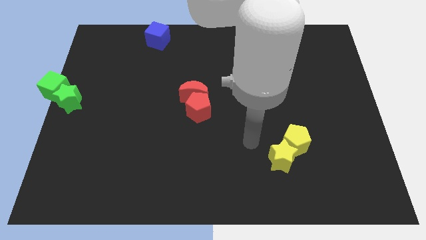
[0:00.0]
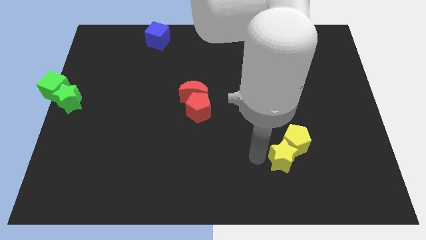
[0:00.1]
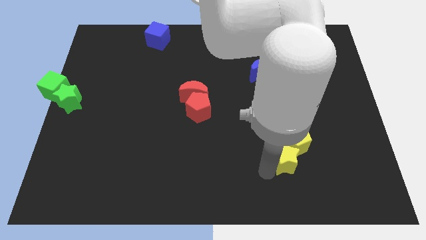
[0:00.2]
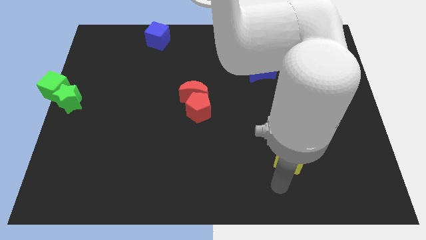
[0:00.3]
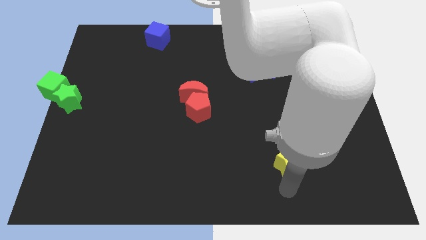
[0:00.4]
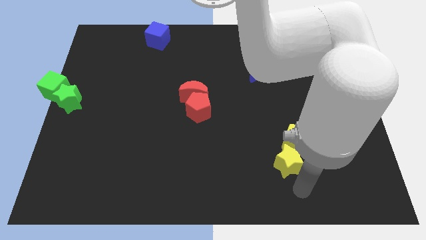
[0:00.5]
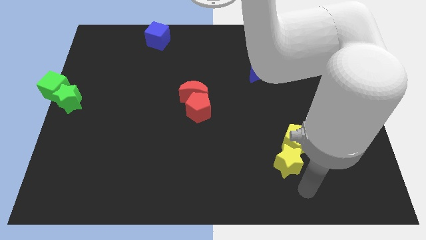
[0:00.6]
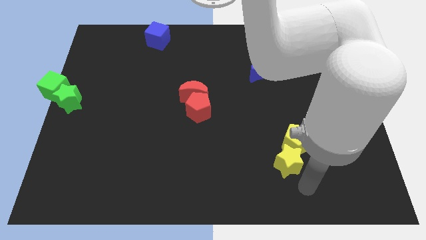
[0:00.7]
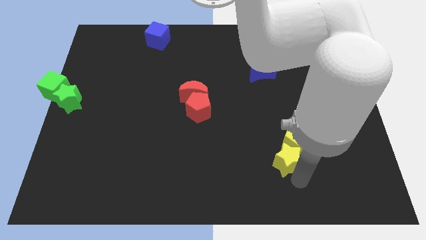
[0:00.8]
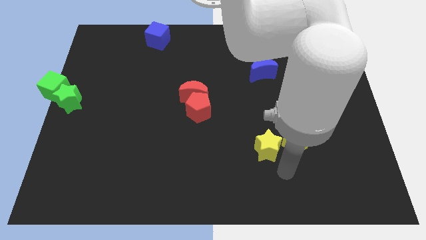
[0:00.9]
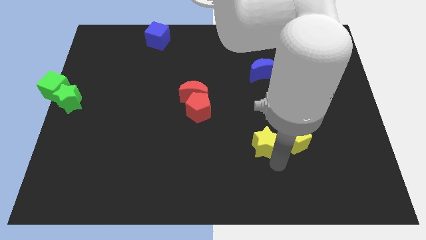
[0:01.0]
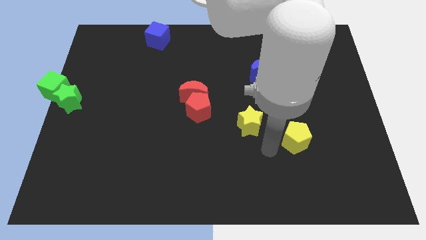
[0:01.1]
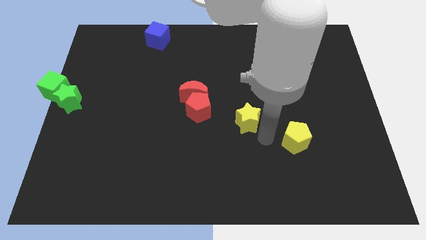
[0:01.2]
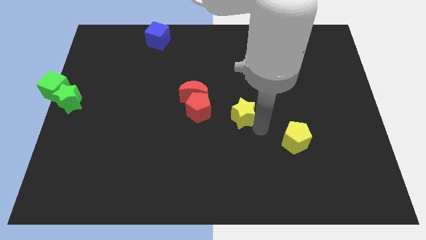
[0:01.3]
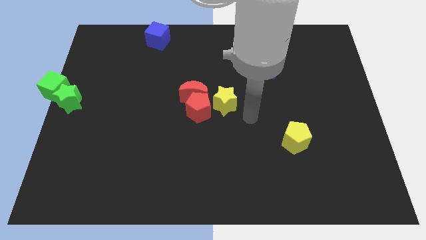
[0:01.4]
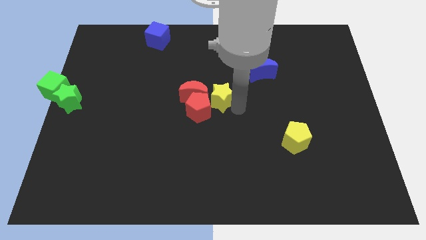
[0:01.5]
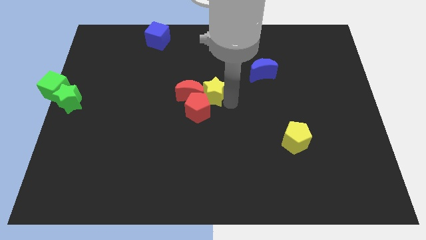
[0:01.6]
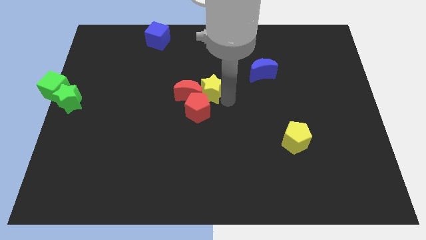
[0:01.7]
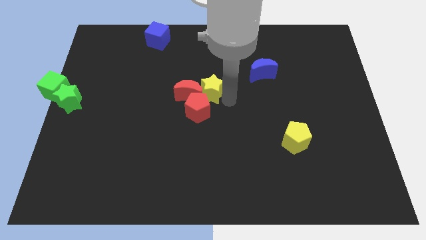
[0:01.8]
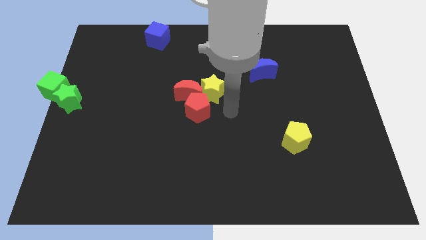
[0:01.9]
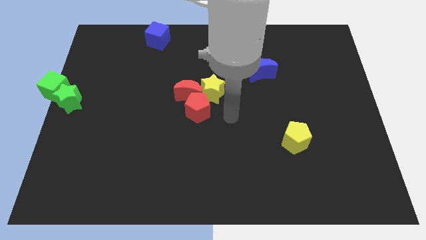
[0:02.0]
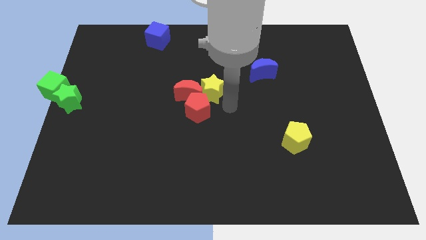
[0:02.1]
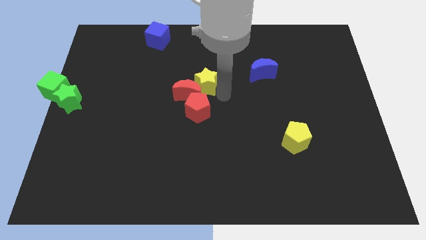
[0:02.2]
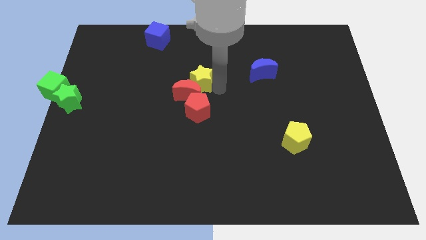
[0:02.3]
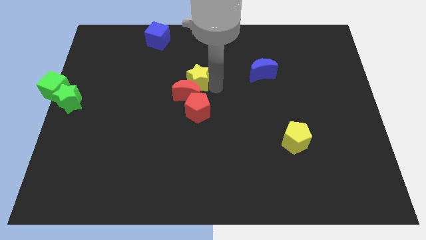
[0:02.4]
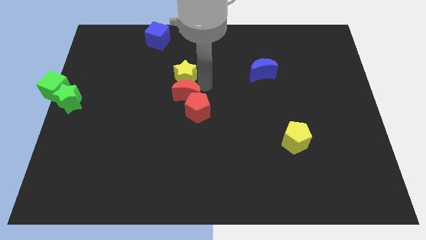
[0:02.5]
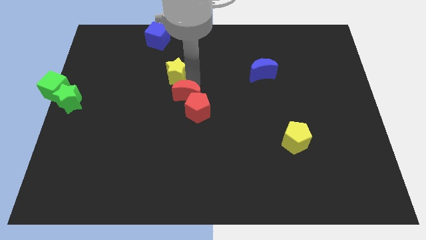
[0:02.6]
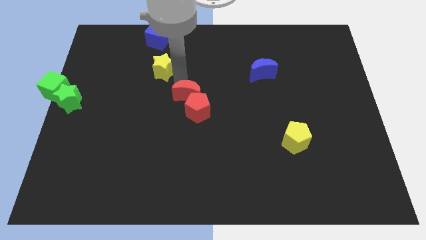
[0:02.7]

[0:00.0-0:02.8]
push yellow star into the yellow blocks

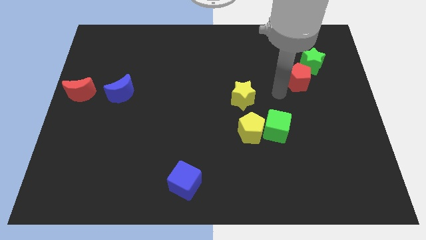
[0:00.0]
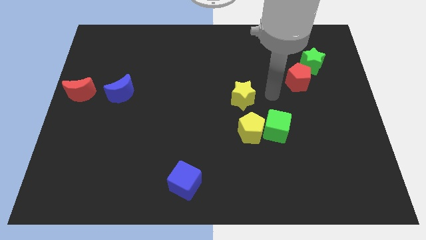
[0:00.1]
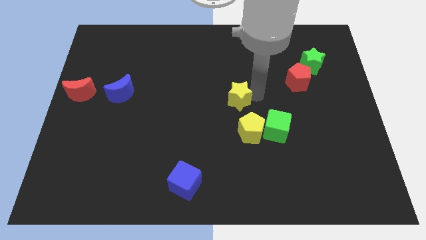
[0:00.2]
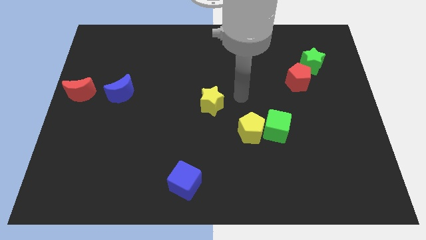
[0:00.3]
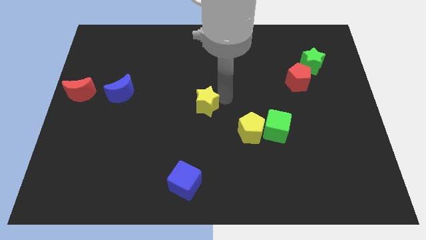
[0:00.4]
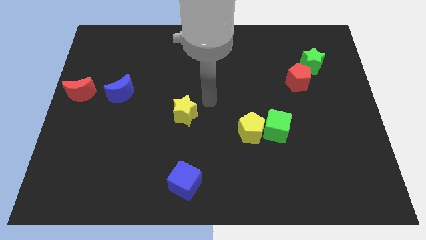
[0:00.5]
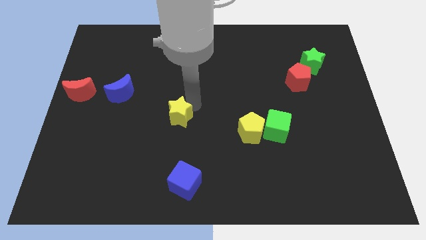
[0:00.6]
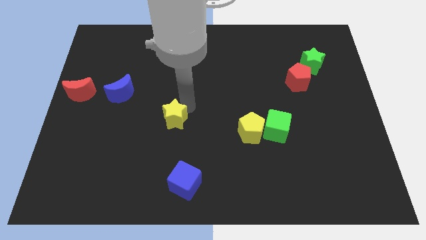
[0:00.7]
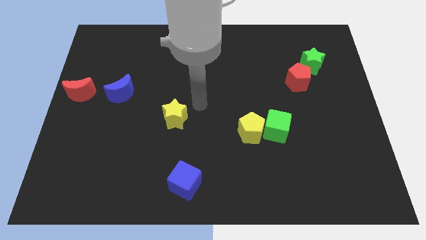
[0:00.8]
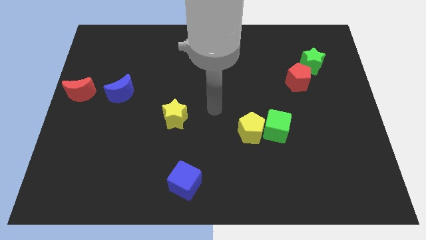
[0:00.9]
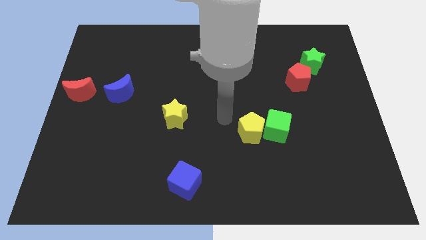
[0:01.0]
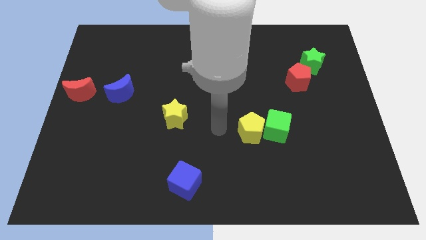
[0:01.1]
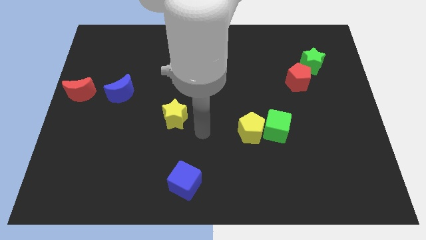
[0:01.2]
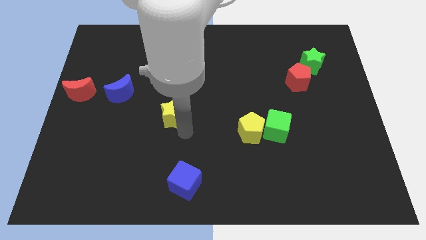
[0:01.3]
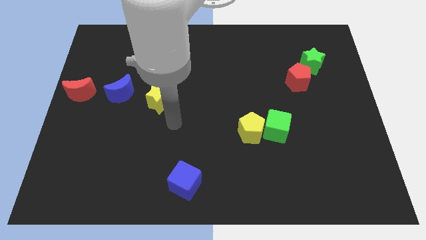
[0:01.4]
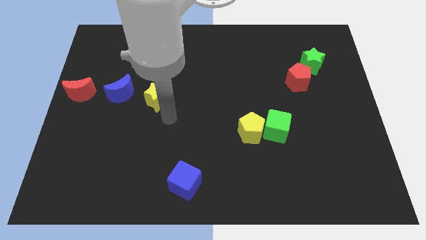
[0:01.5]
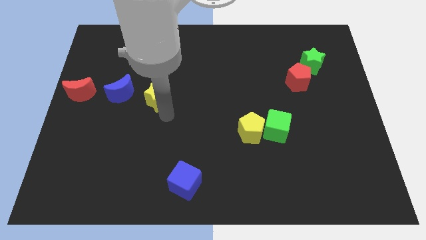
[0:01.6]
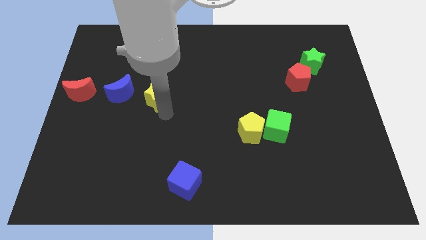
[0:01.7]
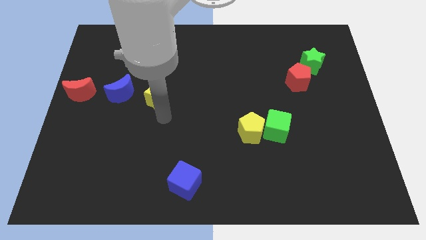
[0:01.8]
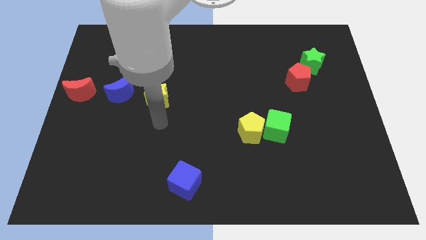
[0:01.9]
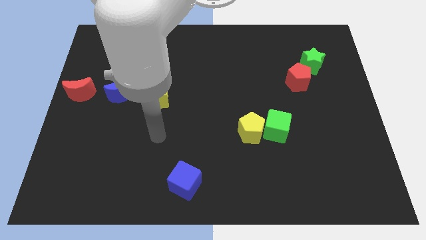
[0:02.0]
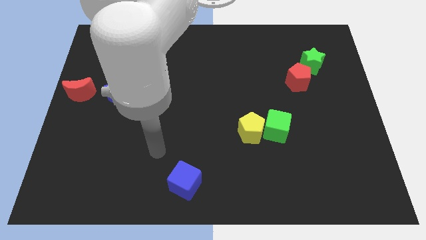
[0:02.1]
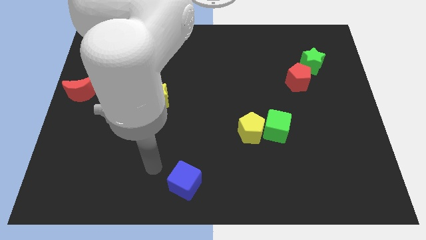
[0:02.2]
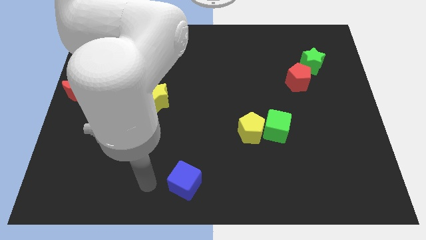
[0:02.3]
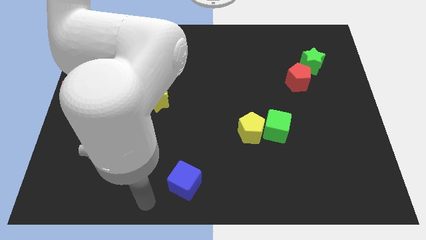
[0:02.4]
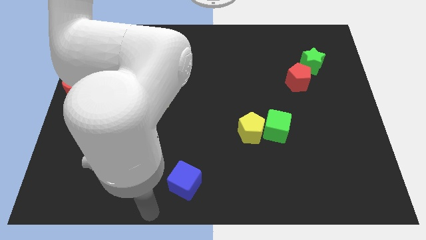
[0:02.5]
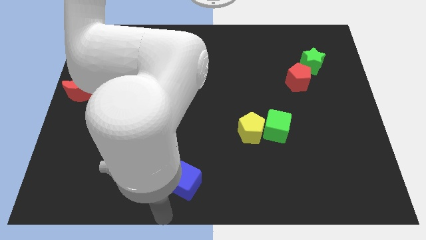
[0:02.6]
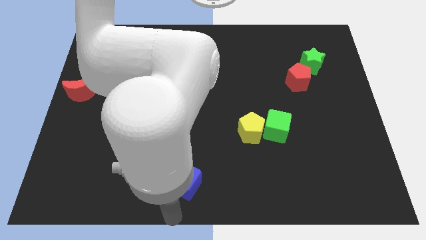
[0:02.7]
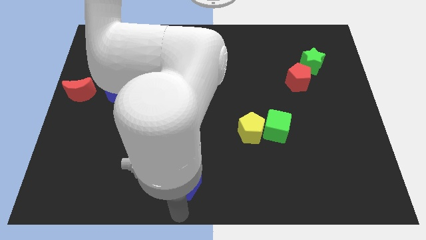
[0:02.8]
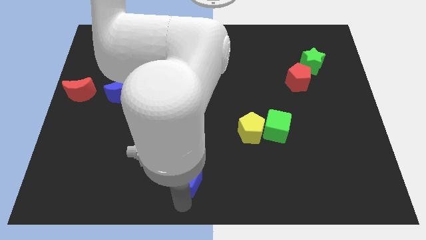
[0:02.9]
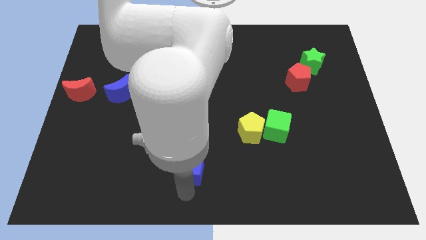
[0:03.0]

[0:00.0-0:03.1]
move the yellow star diagonally top left to the yellow pentagon

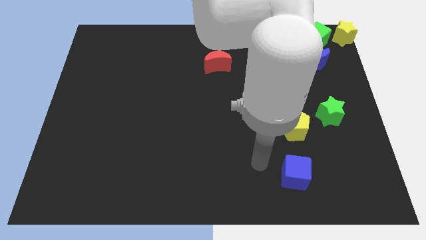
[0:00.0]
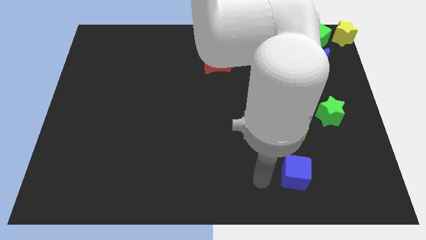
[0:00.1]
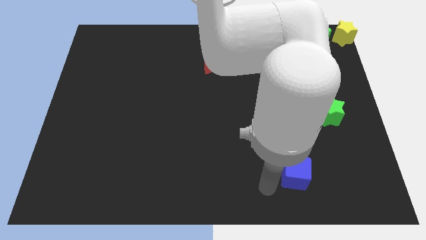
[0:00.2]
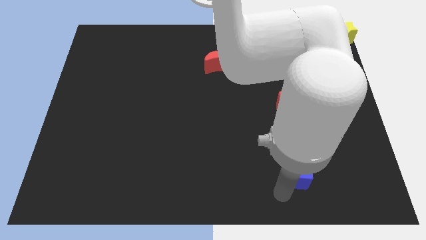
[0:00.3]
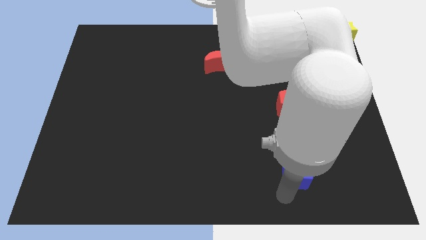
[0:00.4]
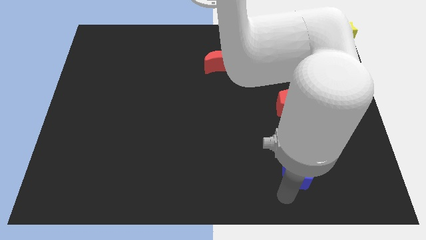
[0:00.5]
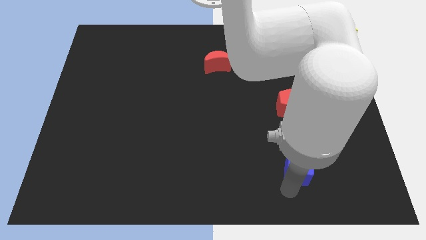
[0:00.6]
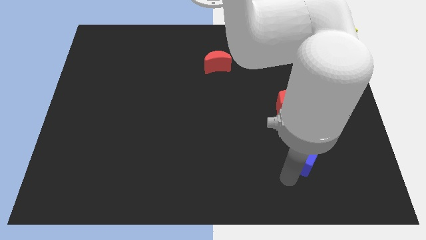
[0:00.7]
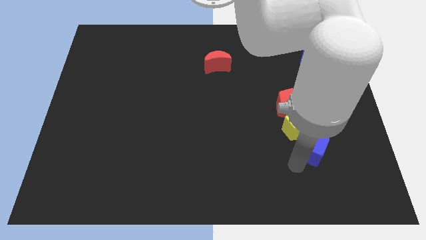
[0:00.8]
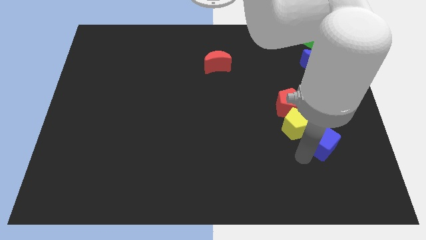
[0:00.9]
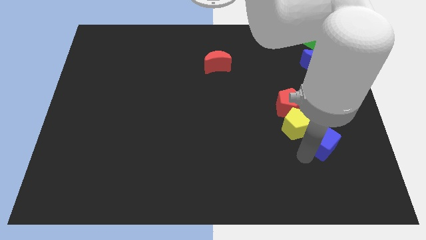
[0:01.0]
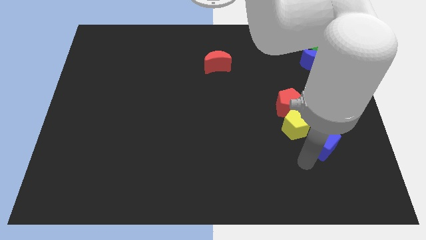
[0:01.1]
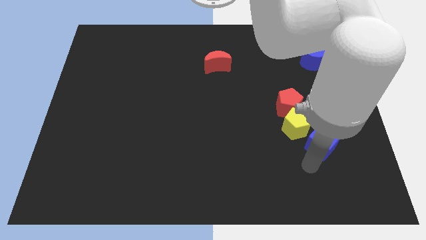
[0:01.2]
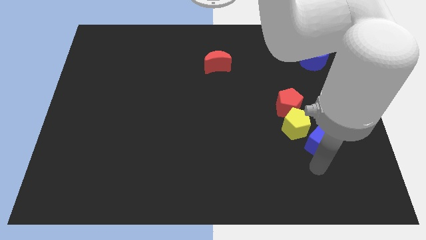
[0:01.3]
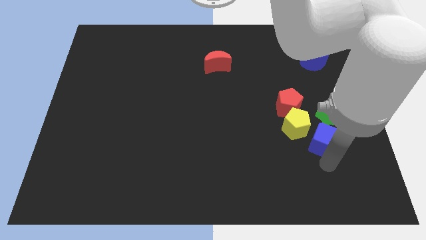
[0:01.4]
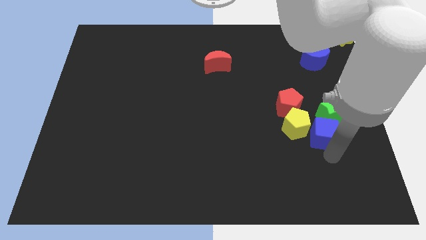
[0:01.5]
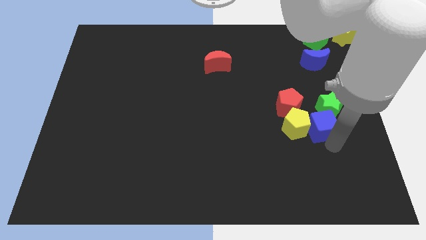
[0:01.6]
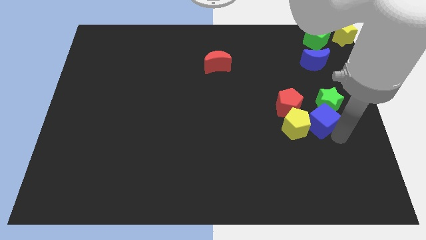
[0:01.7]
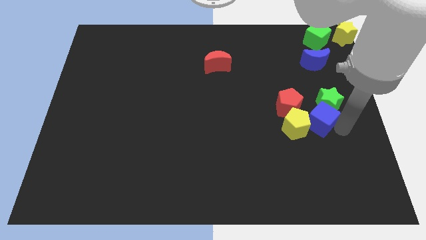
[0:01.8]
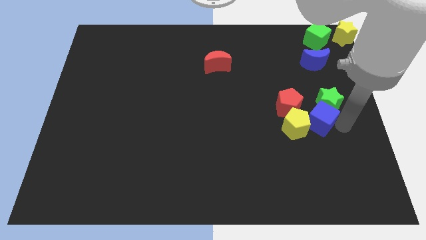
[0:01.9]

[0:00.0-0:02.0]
push the blue cube into the green star

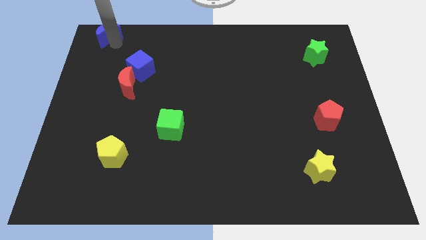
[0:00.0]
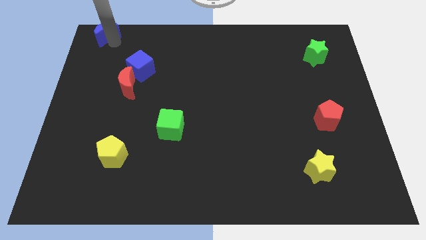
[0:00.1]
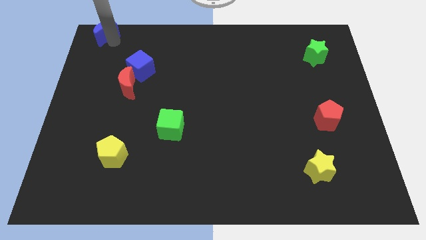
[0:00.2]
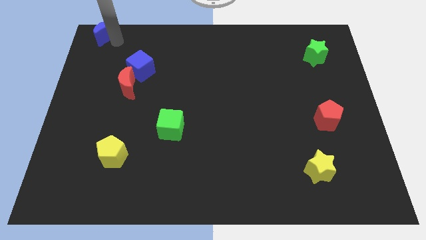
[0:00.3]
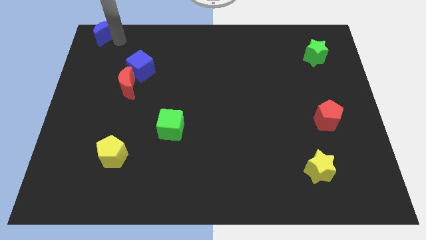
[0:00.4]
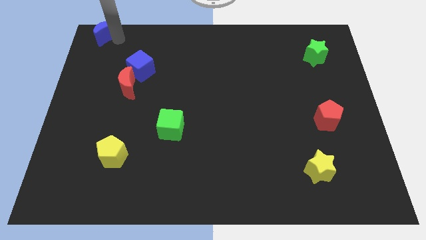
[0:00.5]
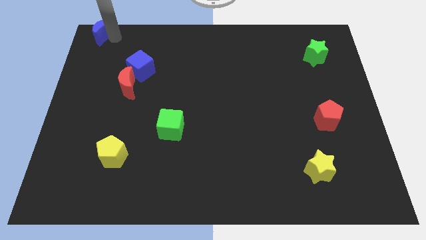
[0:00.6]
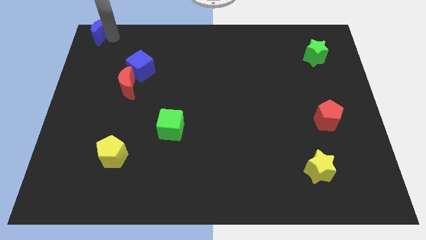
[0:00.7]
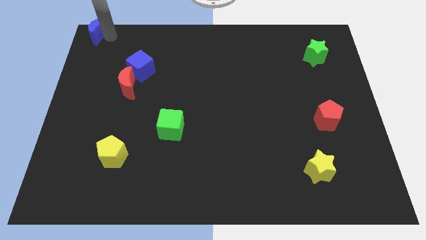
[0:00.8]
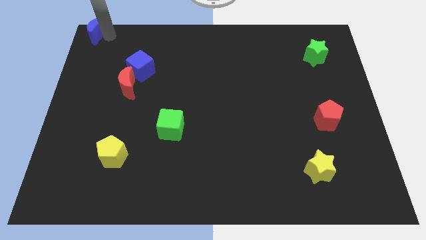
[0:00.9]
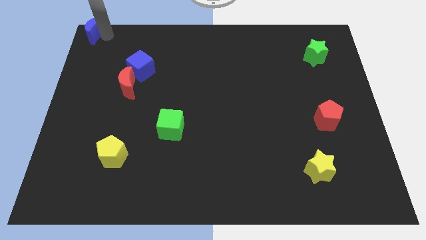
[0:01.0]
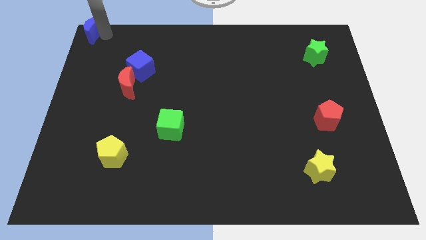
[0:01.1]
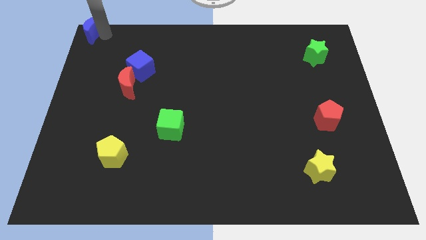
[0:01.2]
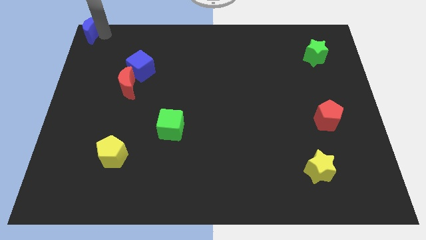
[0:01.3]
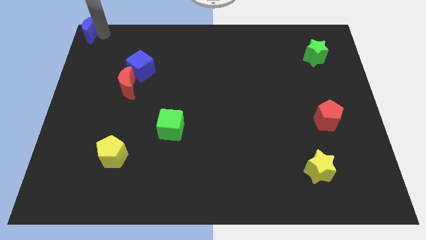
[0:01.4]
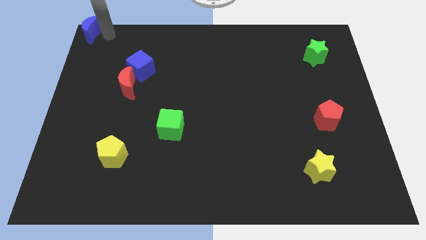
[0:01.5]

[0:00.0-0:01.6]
place the blue moon at the top left side of the table
